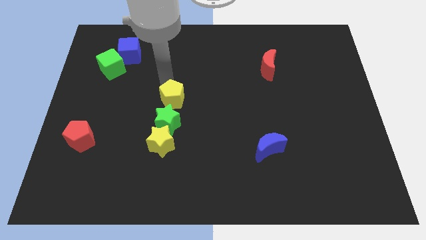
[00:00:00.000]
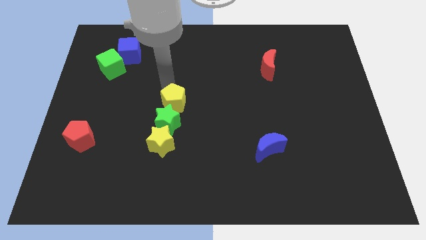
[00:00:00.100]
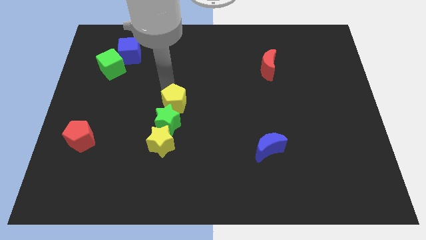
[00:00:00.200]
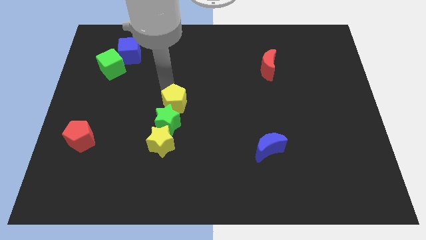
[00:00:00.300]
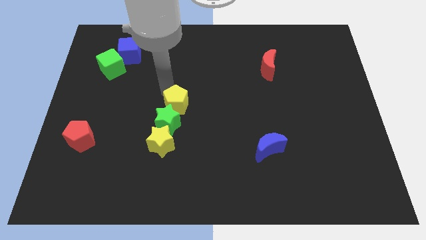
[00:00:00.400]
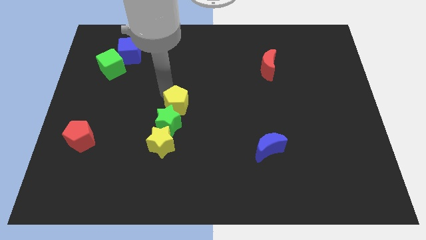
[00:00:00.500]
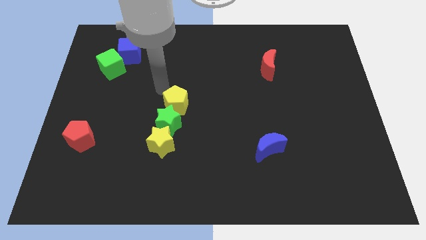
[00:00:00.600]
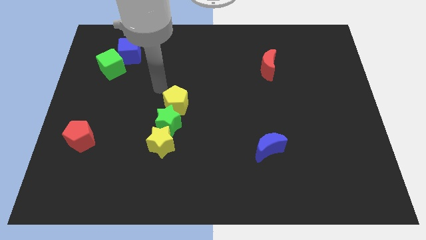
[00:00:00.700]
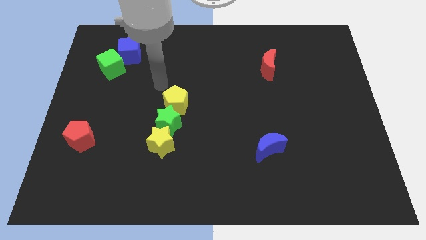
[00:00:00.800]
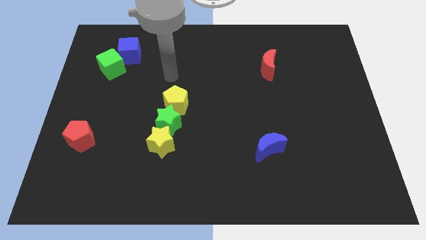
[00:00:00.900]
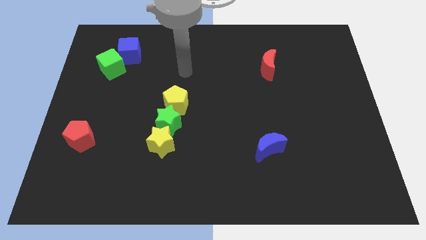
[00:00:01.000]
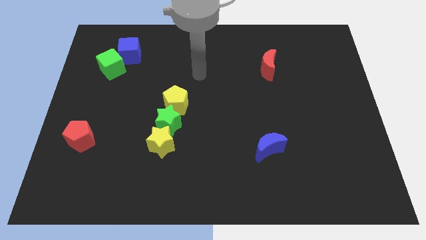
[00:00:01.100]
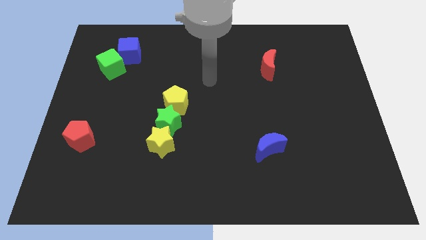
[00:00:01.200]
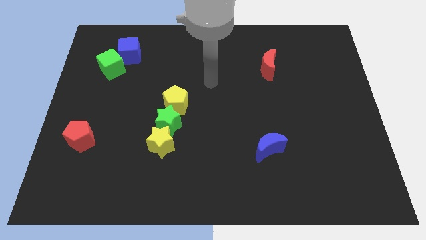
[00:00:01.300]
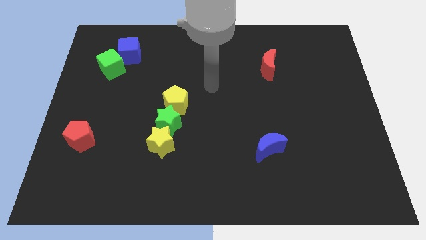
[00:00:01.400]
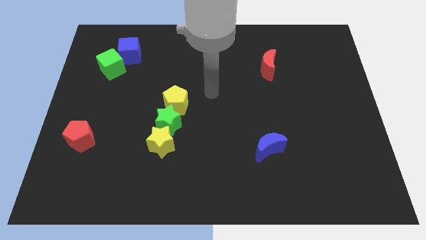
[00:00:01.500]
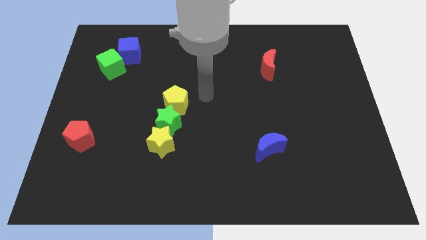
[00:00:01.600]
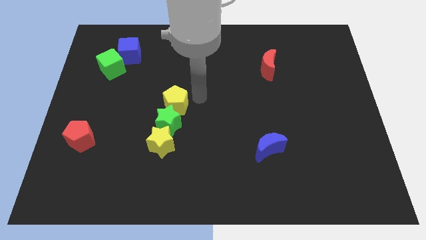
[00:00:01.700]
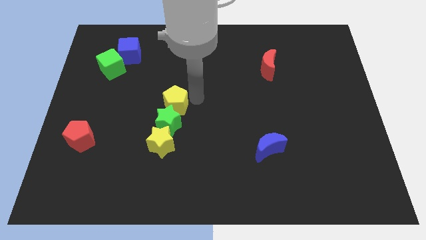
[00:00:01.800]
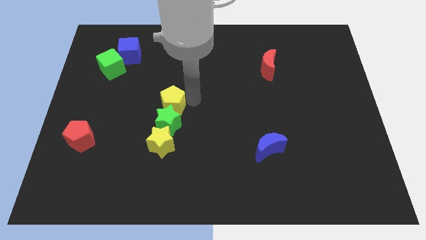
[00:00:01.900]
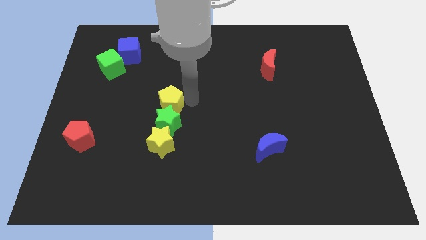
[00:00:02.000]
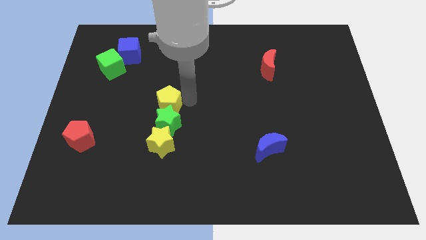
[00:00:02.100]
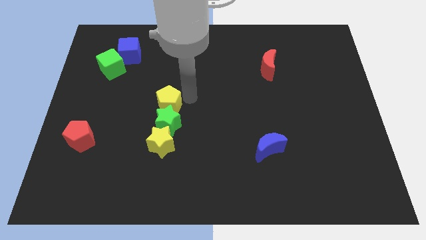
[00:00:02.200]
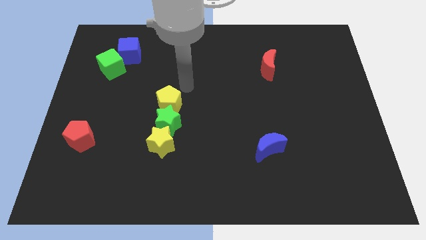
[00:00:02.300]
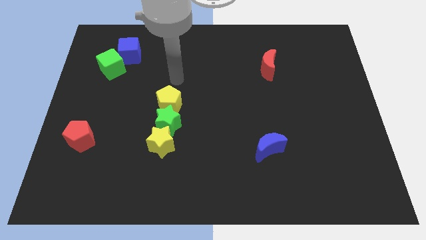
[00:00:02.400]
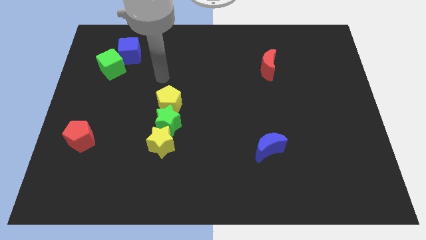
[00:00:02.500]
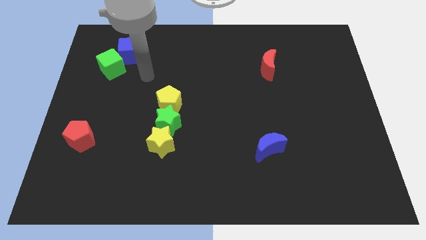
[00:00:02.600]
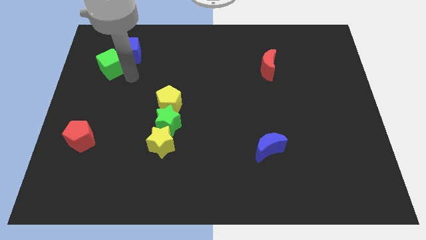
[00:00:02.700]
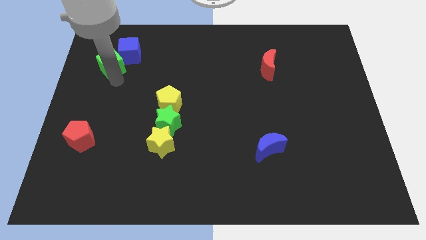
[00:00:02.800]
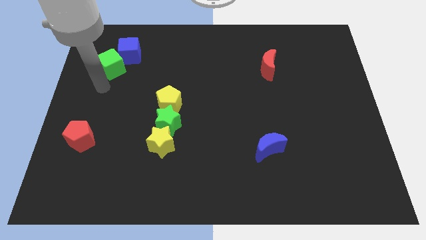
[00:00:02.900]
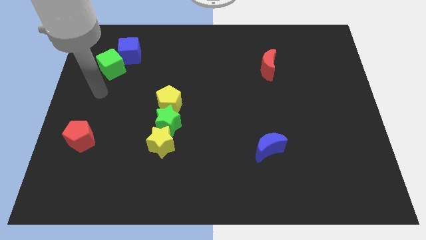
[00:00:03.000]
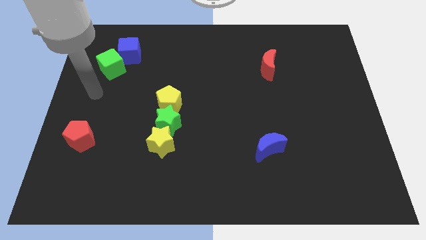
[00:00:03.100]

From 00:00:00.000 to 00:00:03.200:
push the yellow pentagon close to the top of the green star

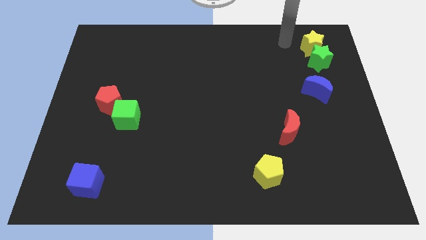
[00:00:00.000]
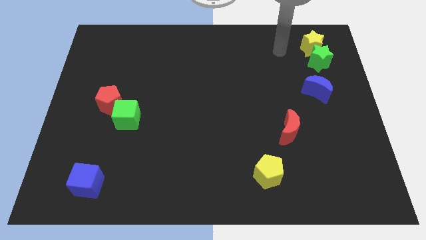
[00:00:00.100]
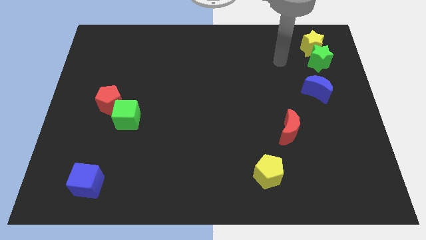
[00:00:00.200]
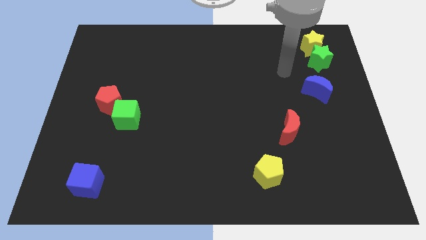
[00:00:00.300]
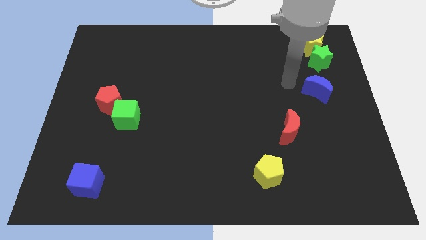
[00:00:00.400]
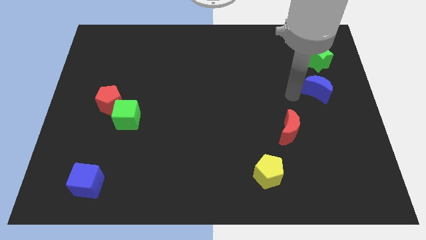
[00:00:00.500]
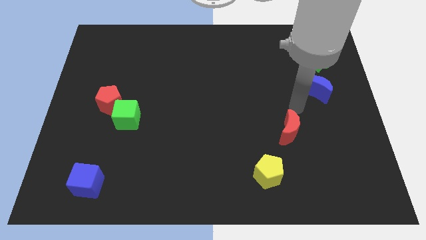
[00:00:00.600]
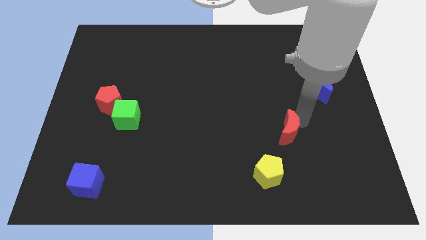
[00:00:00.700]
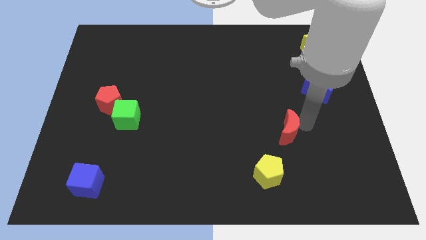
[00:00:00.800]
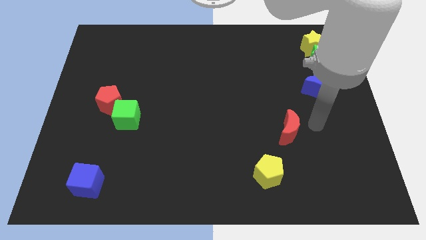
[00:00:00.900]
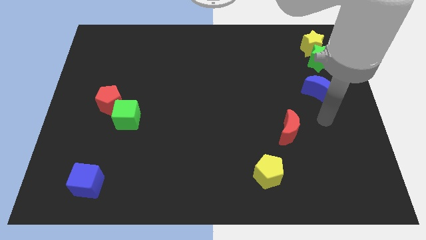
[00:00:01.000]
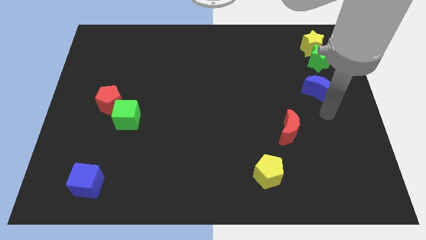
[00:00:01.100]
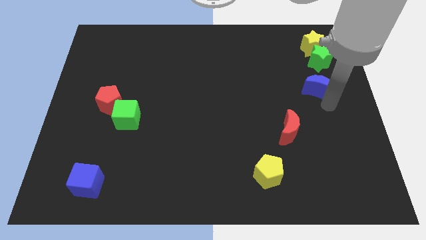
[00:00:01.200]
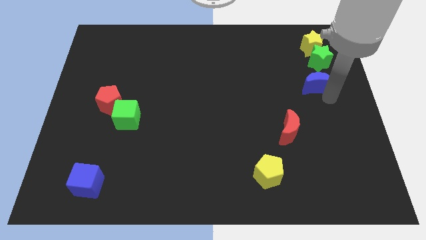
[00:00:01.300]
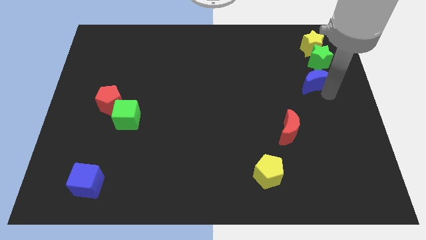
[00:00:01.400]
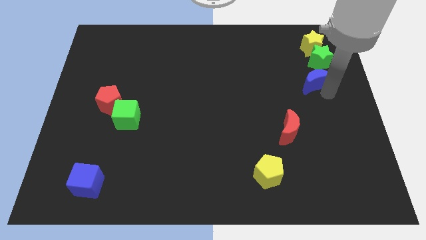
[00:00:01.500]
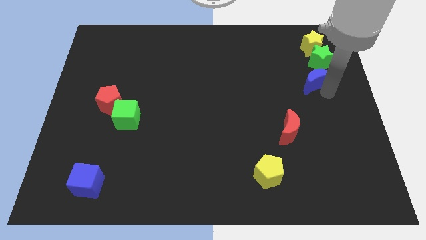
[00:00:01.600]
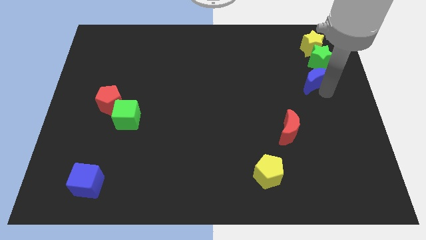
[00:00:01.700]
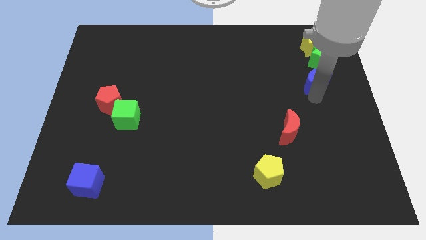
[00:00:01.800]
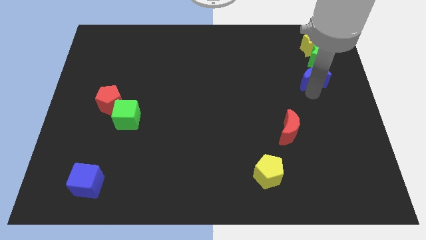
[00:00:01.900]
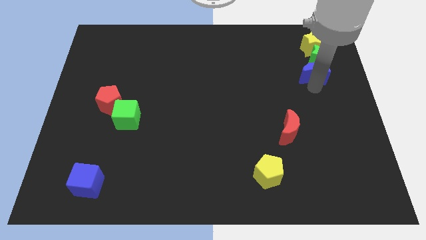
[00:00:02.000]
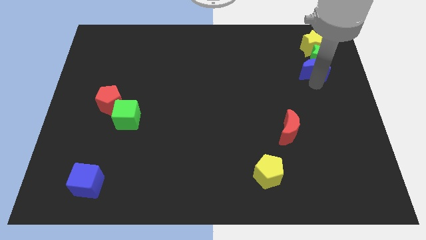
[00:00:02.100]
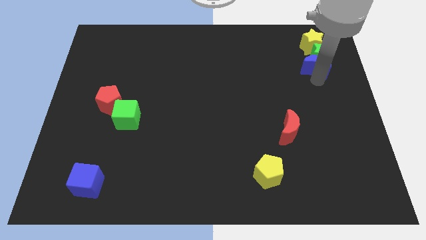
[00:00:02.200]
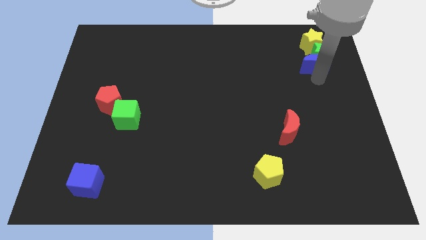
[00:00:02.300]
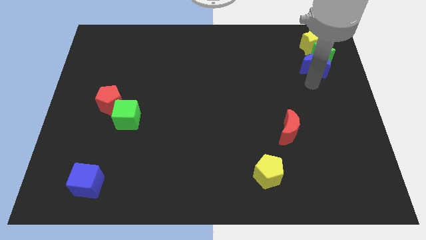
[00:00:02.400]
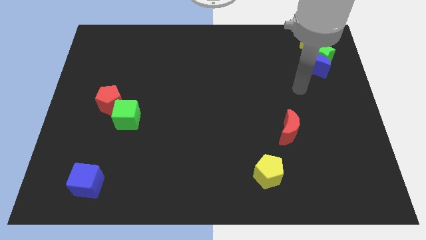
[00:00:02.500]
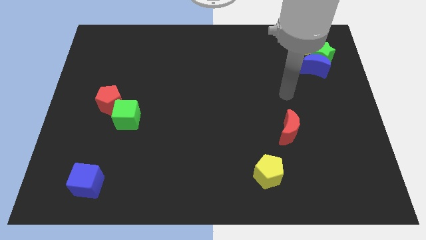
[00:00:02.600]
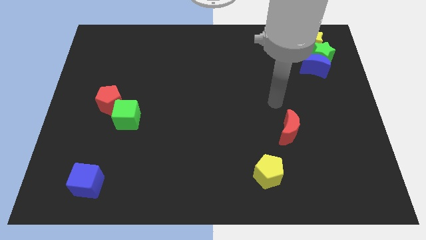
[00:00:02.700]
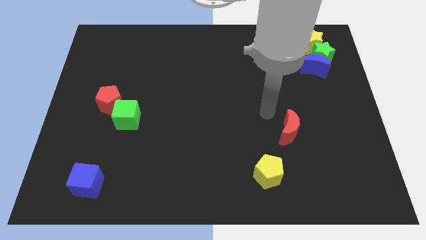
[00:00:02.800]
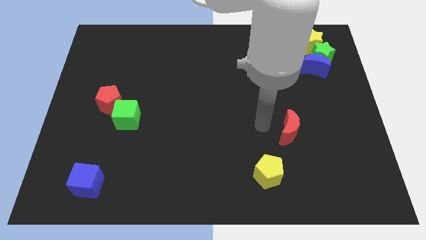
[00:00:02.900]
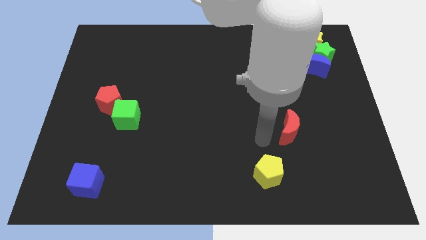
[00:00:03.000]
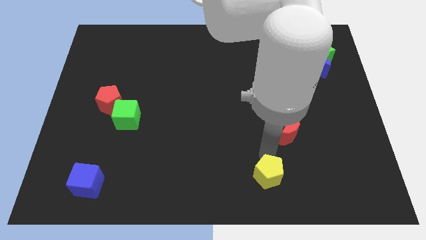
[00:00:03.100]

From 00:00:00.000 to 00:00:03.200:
place blue moon below the green star

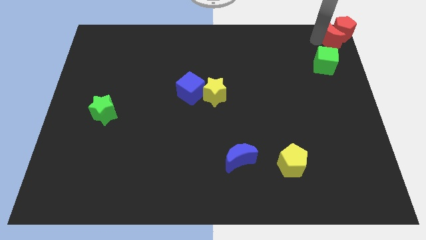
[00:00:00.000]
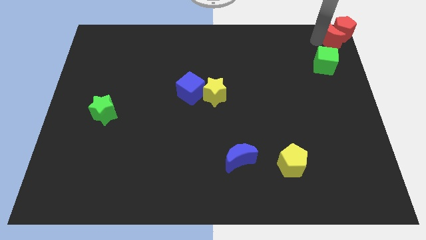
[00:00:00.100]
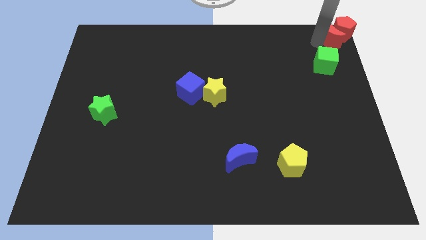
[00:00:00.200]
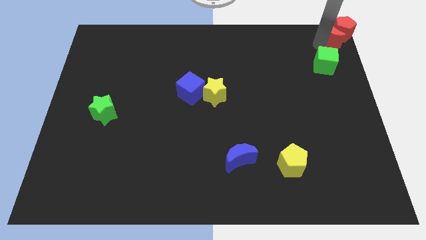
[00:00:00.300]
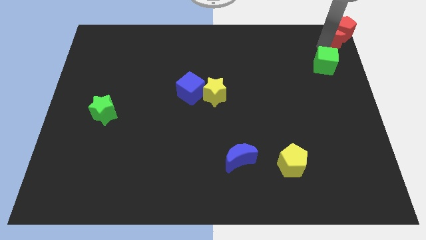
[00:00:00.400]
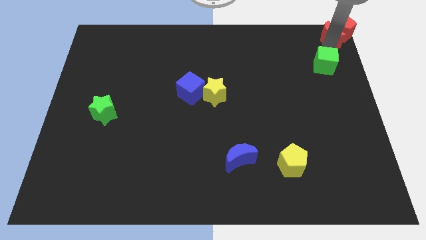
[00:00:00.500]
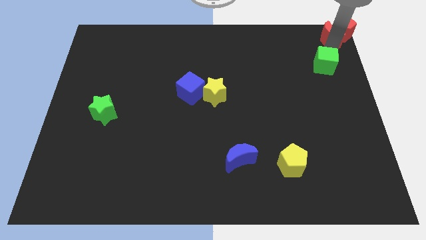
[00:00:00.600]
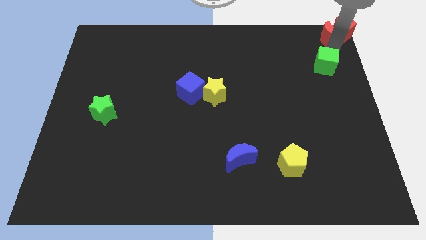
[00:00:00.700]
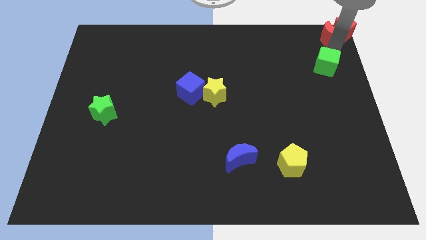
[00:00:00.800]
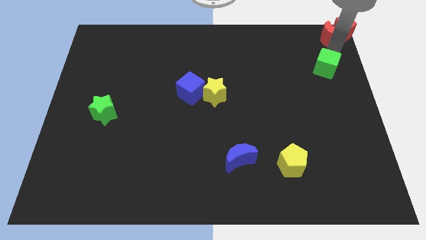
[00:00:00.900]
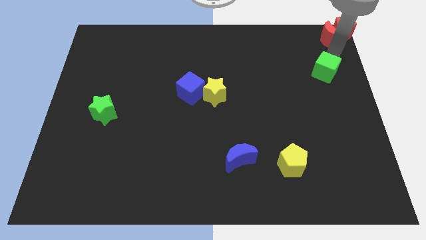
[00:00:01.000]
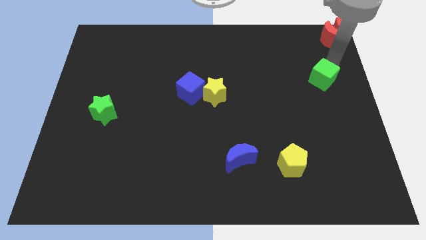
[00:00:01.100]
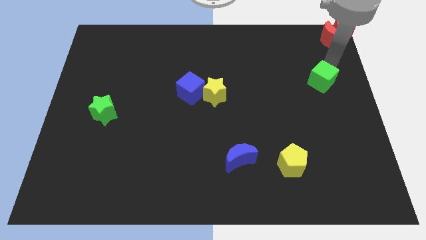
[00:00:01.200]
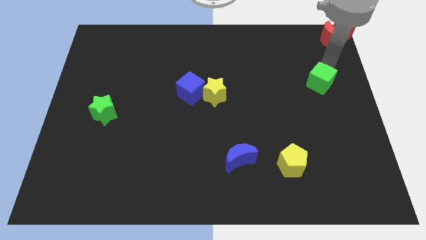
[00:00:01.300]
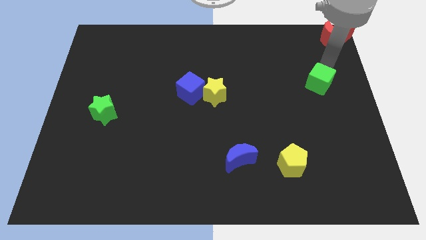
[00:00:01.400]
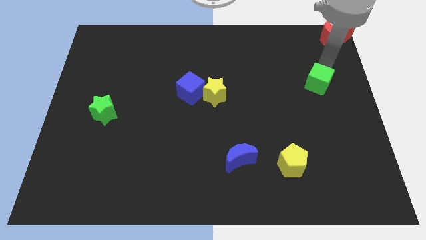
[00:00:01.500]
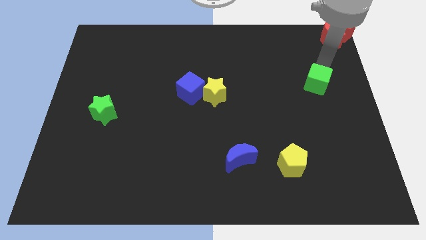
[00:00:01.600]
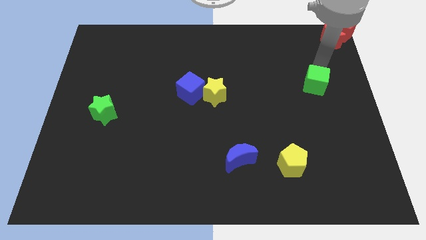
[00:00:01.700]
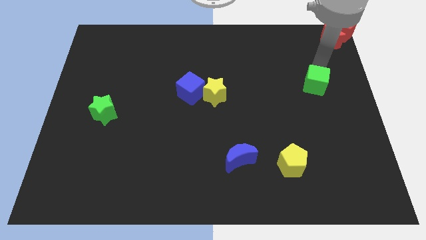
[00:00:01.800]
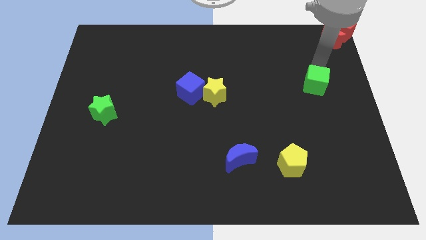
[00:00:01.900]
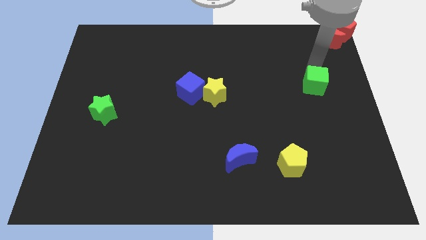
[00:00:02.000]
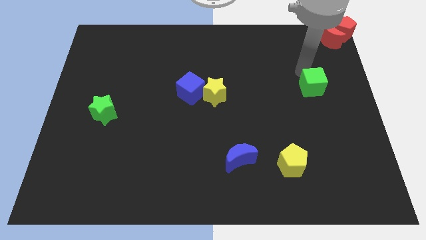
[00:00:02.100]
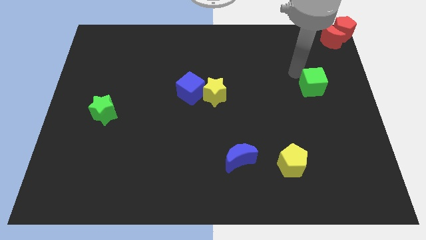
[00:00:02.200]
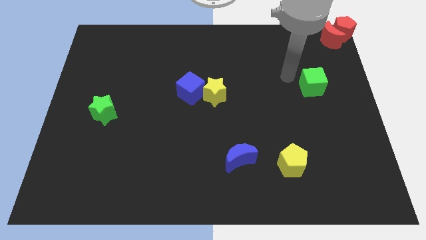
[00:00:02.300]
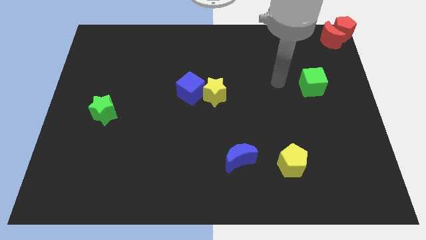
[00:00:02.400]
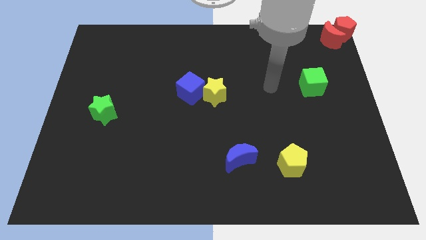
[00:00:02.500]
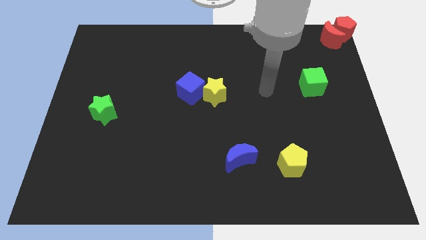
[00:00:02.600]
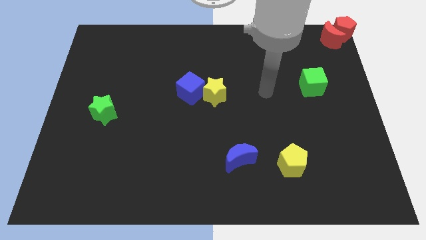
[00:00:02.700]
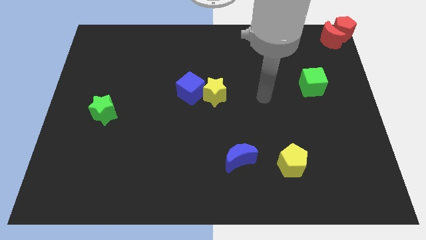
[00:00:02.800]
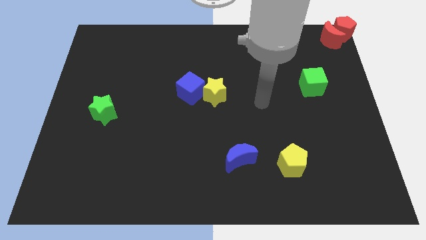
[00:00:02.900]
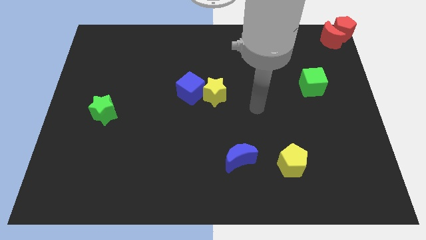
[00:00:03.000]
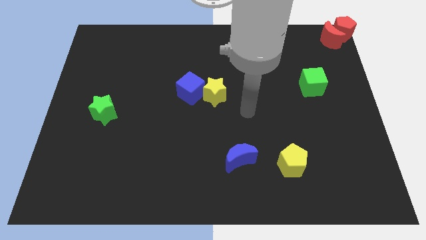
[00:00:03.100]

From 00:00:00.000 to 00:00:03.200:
move the green cube slightly downwards
